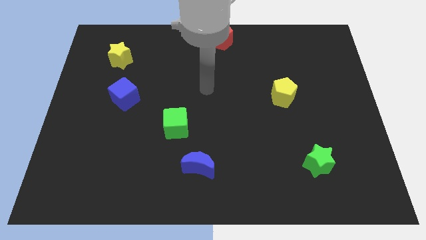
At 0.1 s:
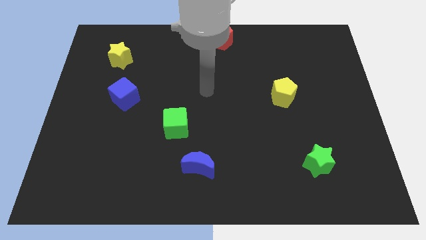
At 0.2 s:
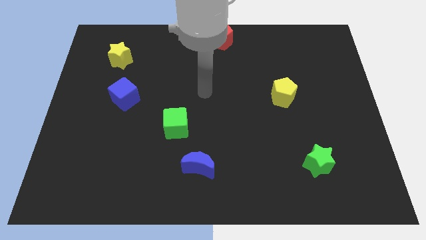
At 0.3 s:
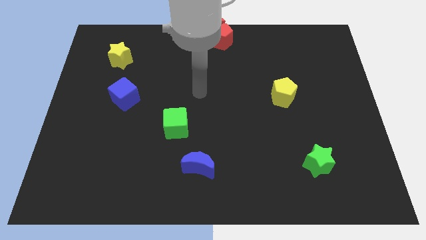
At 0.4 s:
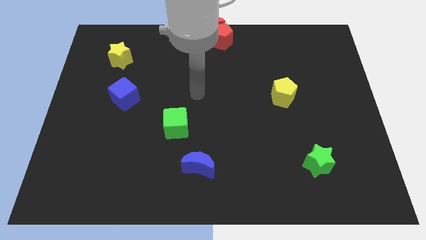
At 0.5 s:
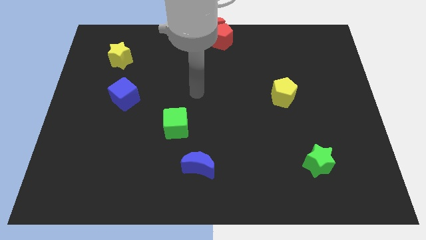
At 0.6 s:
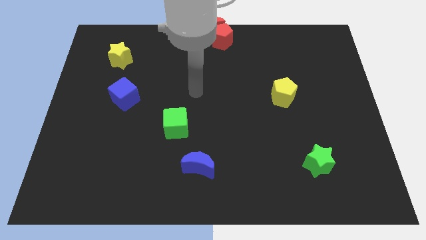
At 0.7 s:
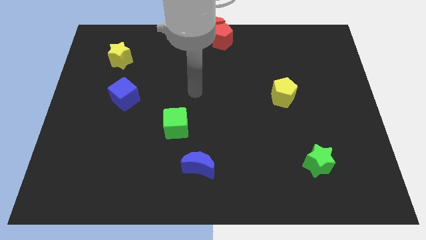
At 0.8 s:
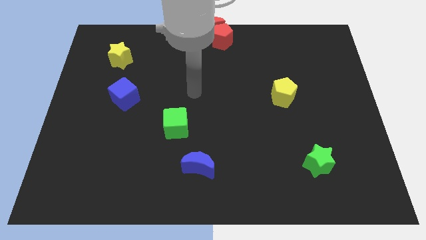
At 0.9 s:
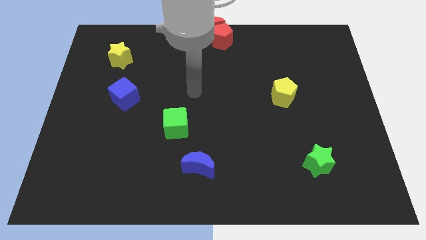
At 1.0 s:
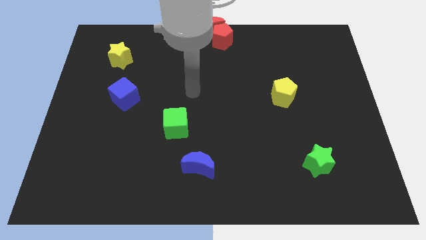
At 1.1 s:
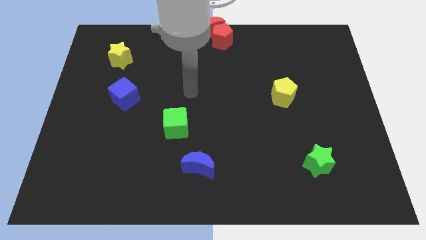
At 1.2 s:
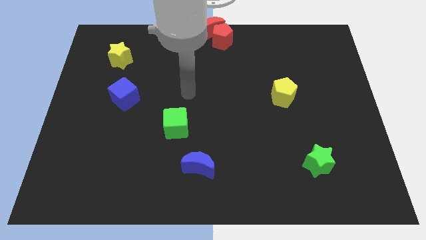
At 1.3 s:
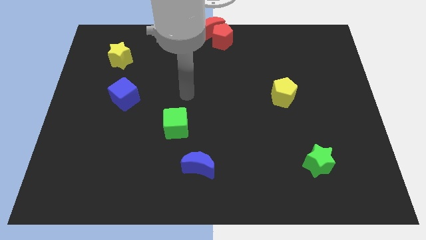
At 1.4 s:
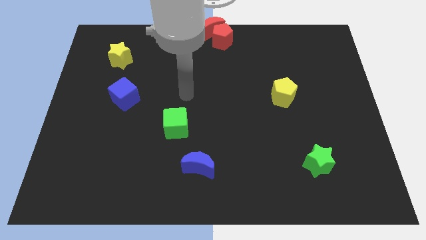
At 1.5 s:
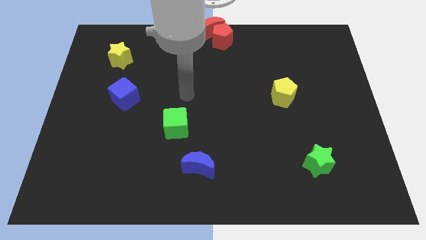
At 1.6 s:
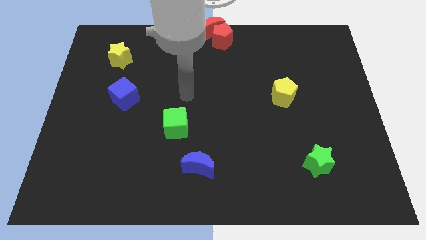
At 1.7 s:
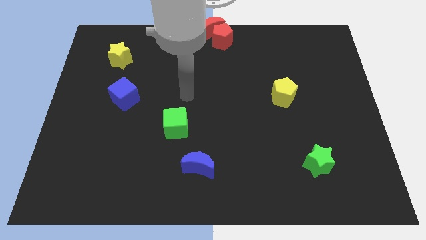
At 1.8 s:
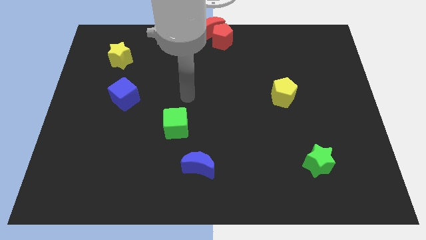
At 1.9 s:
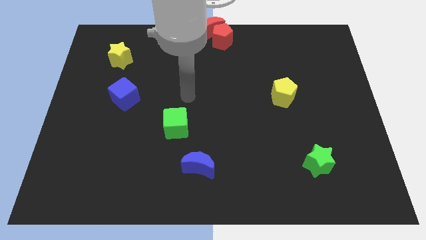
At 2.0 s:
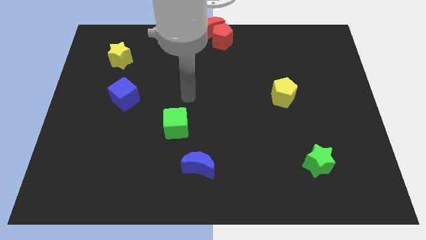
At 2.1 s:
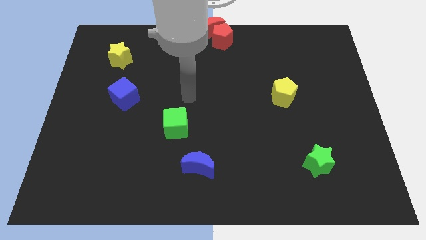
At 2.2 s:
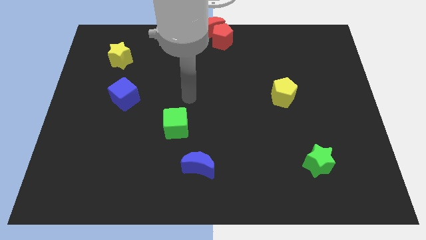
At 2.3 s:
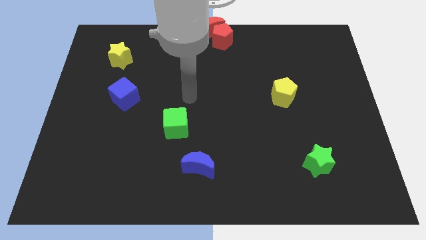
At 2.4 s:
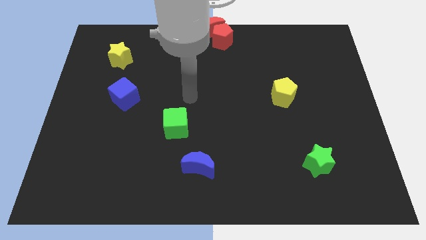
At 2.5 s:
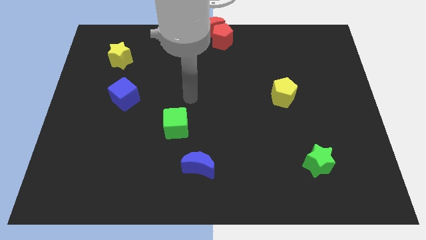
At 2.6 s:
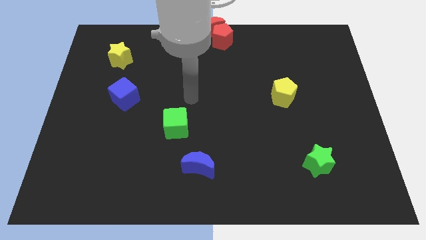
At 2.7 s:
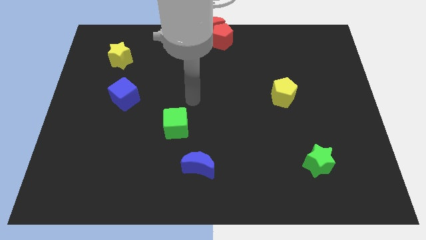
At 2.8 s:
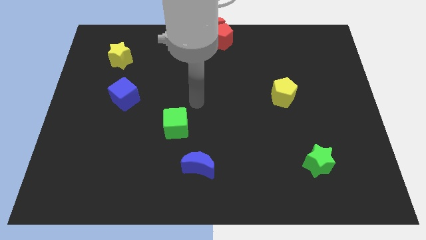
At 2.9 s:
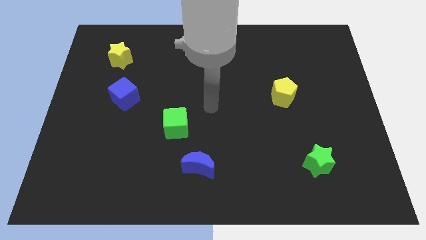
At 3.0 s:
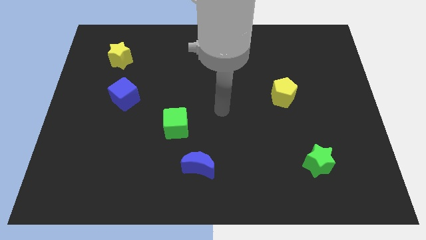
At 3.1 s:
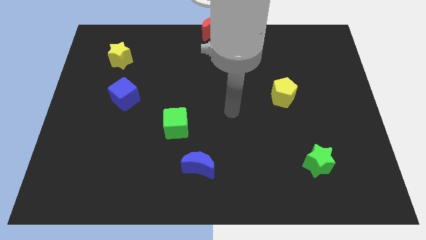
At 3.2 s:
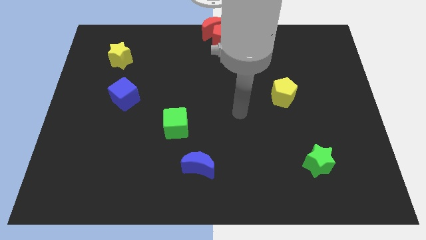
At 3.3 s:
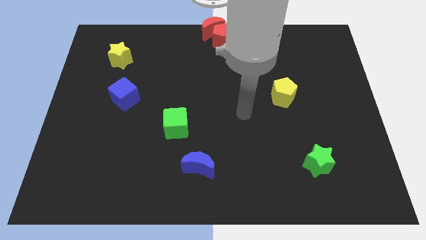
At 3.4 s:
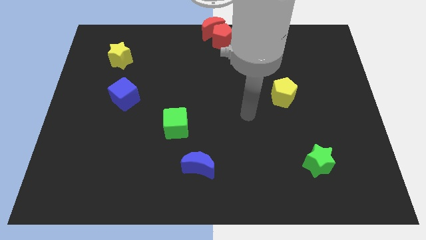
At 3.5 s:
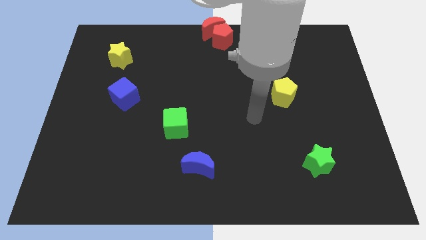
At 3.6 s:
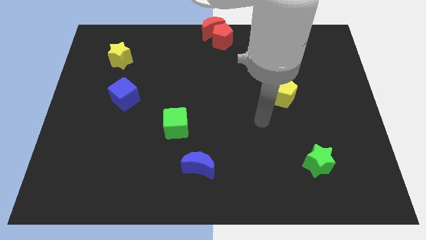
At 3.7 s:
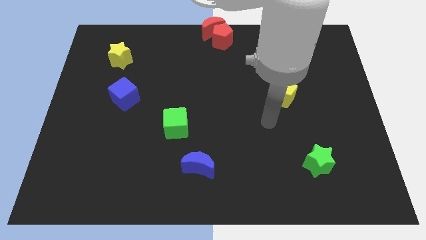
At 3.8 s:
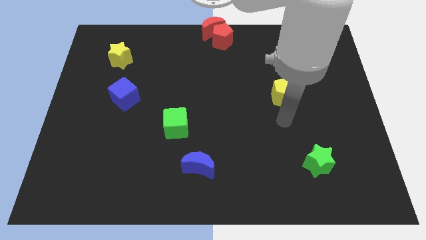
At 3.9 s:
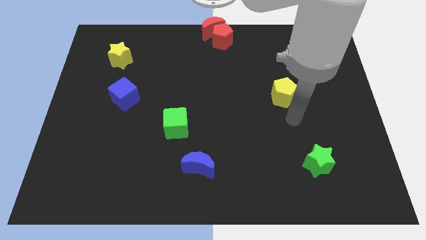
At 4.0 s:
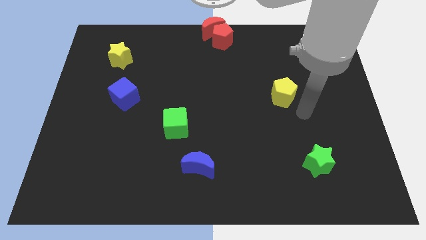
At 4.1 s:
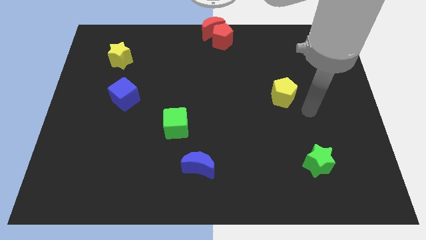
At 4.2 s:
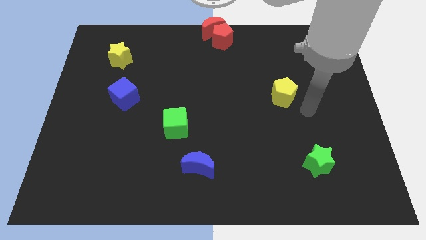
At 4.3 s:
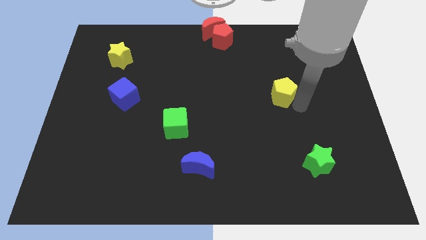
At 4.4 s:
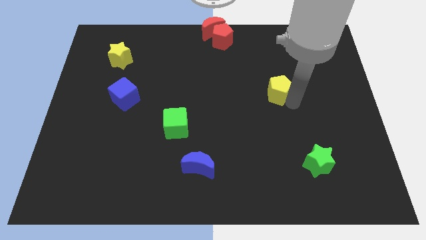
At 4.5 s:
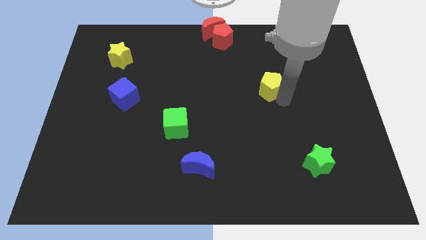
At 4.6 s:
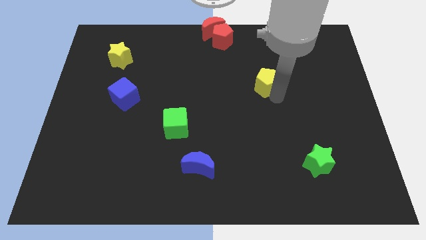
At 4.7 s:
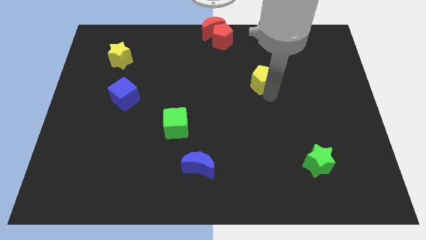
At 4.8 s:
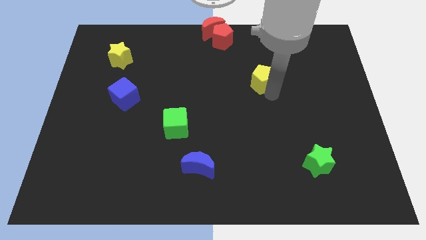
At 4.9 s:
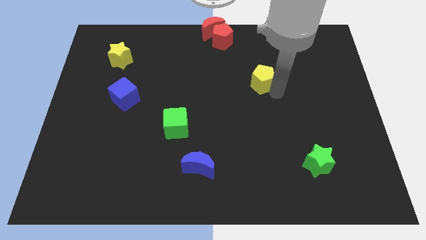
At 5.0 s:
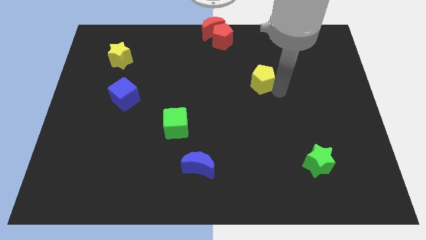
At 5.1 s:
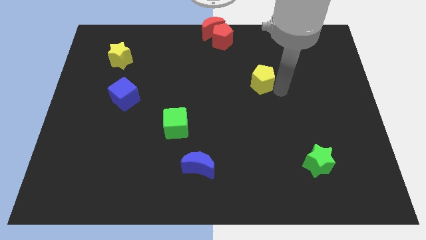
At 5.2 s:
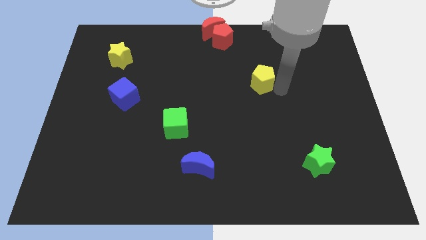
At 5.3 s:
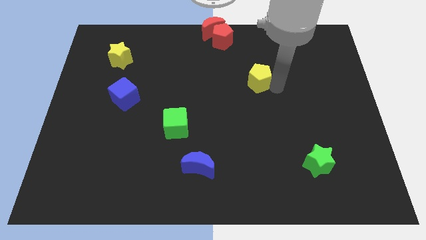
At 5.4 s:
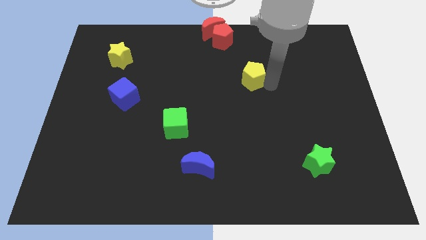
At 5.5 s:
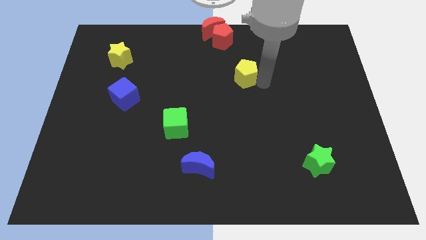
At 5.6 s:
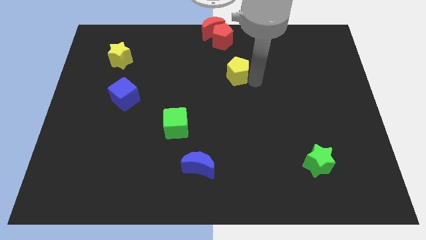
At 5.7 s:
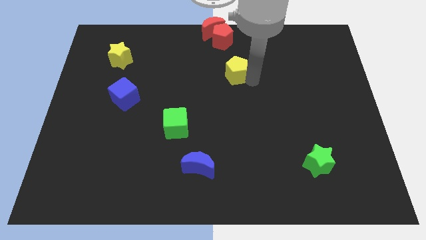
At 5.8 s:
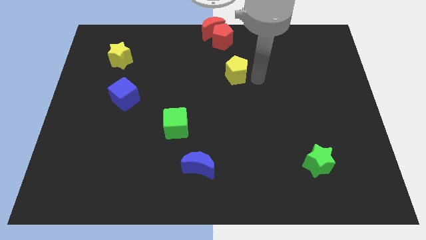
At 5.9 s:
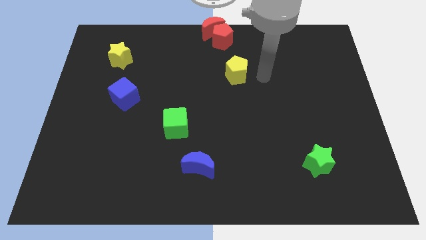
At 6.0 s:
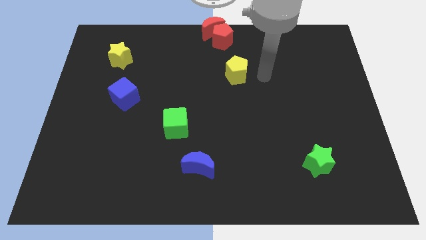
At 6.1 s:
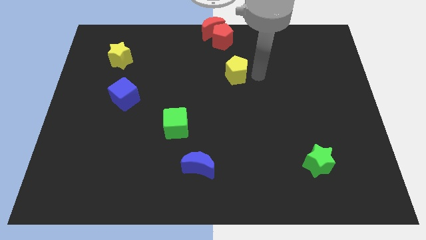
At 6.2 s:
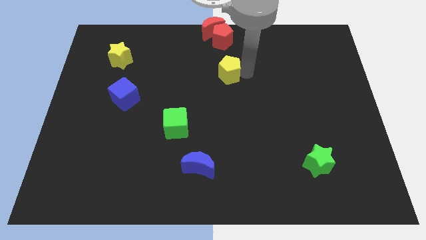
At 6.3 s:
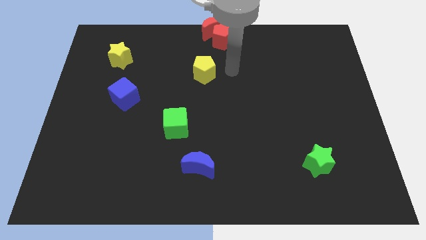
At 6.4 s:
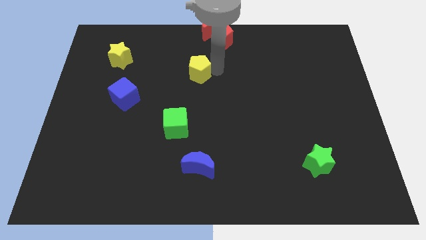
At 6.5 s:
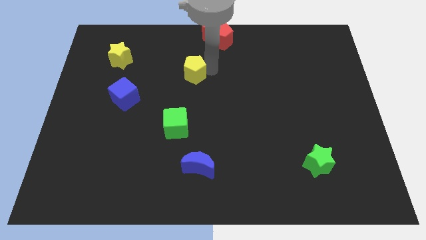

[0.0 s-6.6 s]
push the yellow pentagon towards the red pentagon

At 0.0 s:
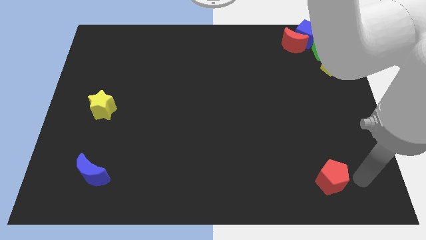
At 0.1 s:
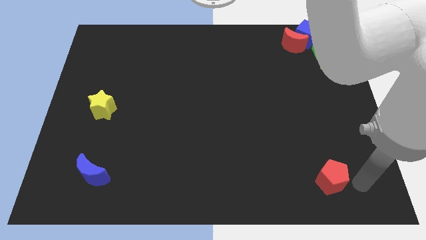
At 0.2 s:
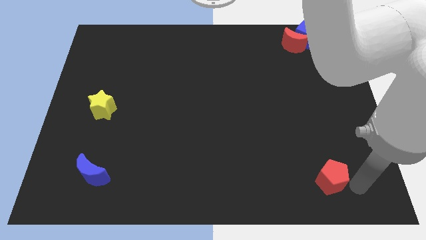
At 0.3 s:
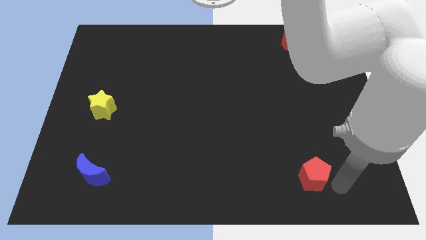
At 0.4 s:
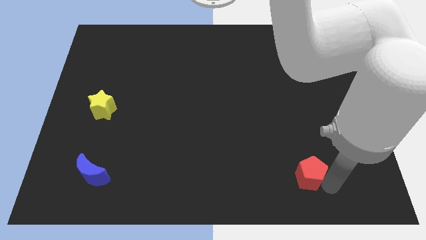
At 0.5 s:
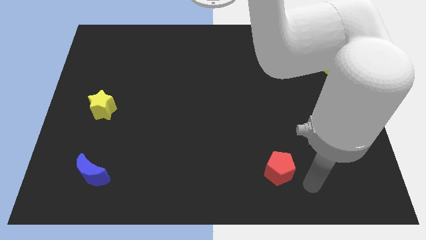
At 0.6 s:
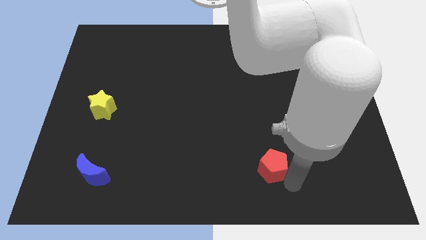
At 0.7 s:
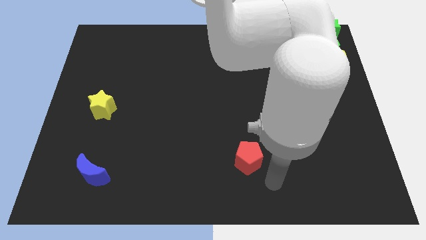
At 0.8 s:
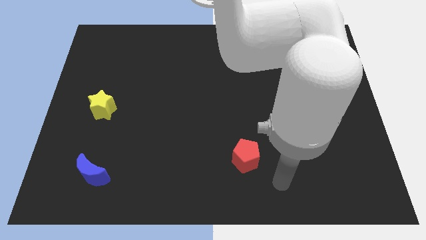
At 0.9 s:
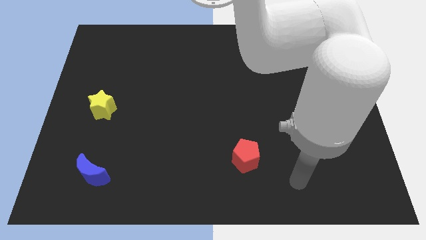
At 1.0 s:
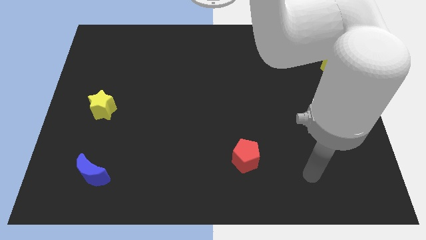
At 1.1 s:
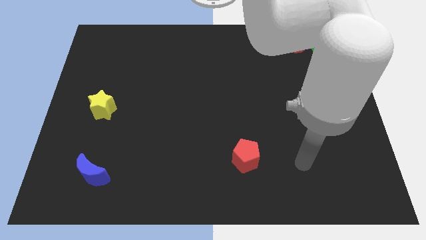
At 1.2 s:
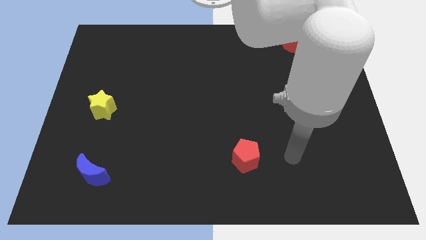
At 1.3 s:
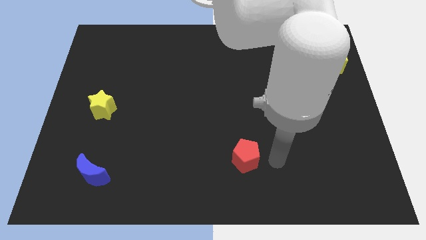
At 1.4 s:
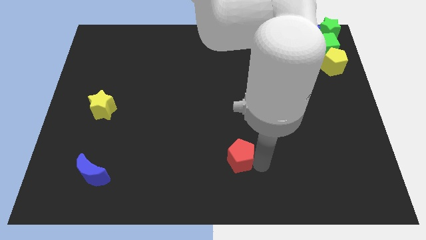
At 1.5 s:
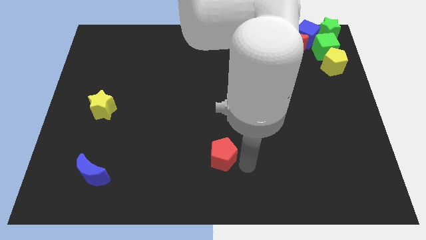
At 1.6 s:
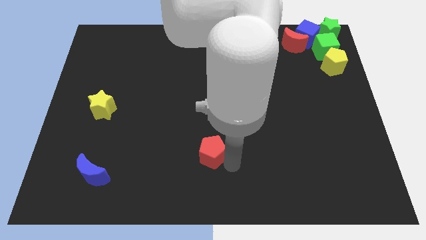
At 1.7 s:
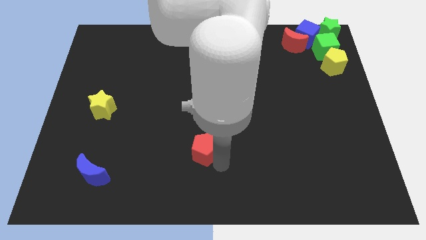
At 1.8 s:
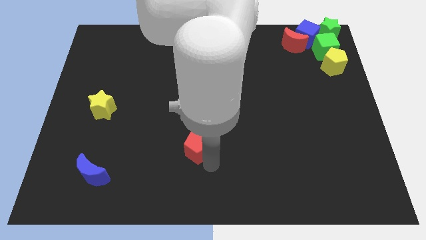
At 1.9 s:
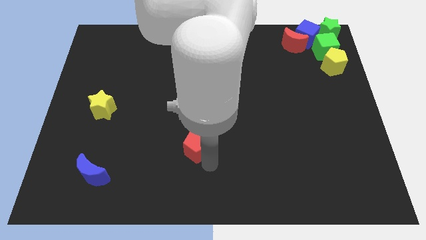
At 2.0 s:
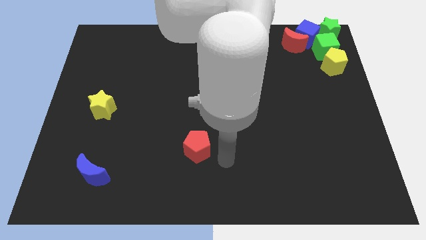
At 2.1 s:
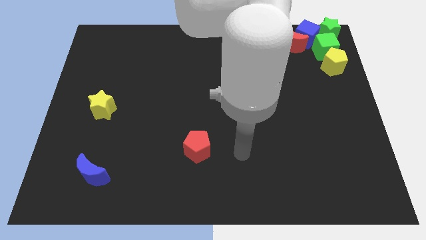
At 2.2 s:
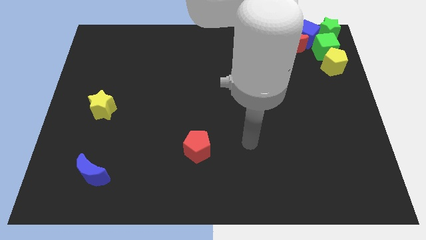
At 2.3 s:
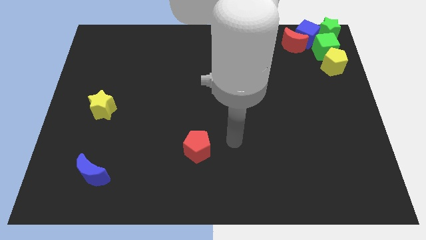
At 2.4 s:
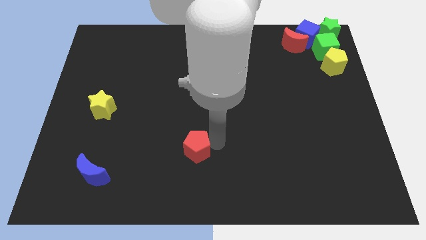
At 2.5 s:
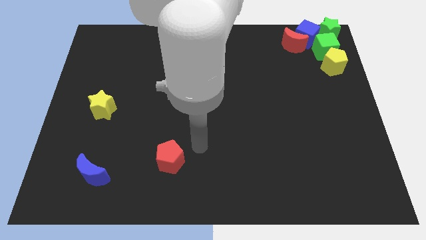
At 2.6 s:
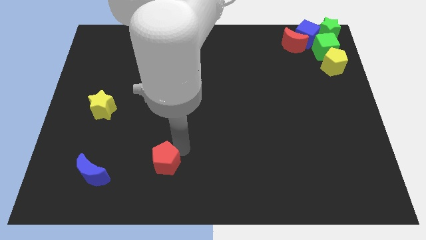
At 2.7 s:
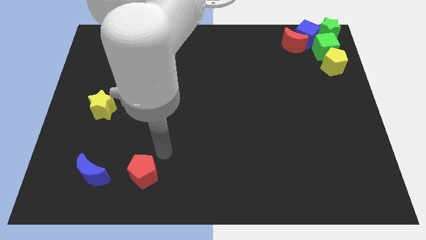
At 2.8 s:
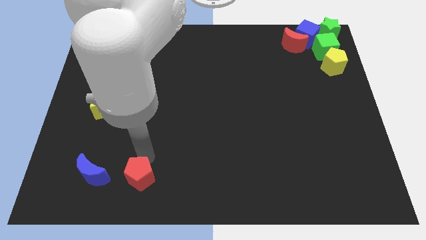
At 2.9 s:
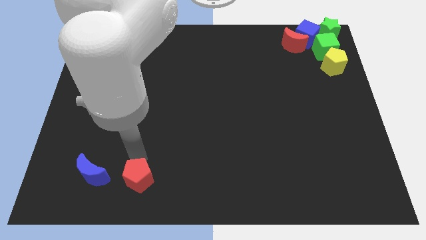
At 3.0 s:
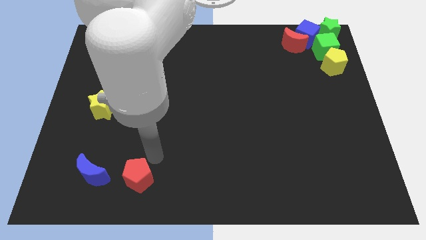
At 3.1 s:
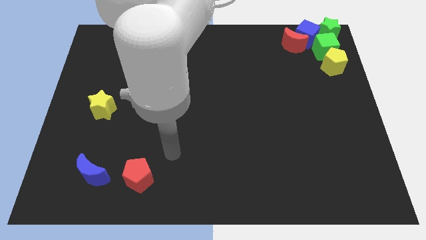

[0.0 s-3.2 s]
place red pentagon beside blue crescent
